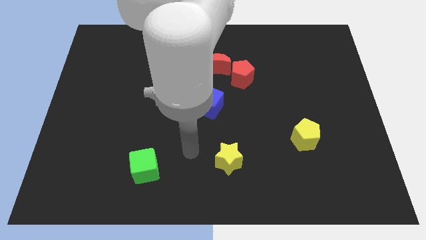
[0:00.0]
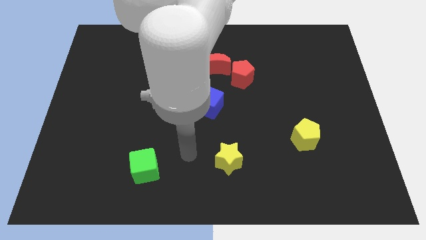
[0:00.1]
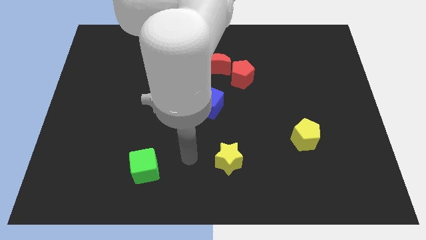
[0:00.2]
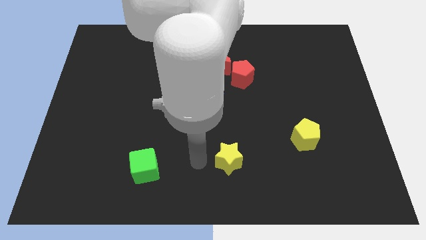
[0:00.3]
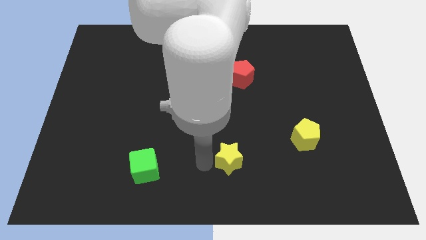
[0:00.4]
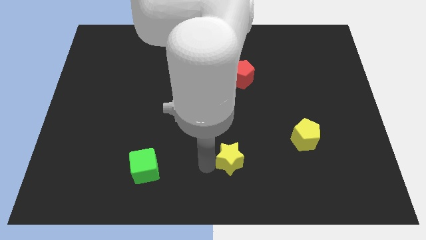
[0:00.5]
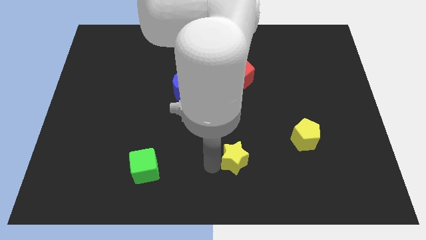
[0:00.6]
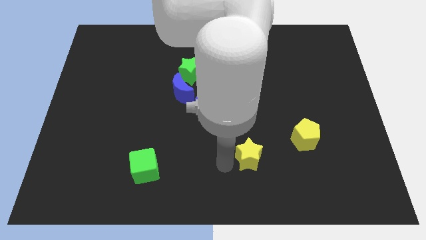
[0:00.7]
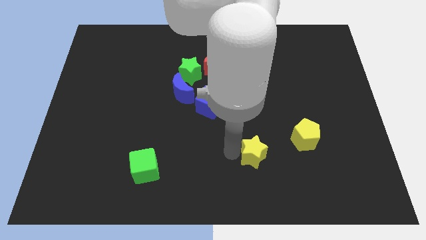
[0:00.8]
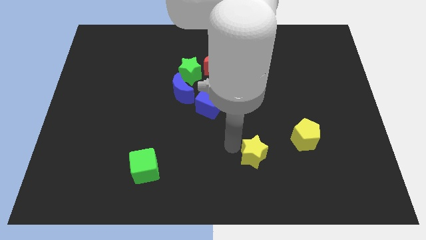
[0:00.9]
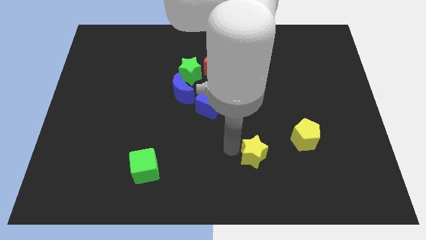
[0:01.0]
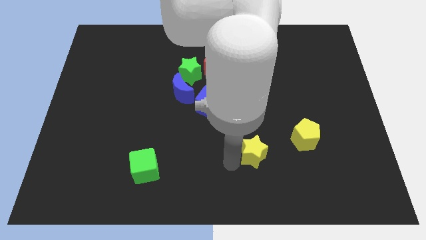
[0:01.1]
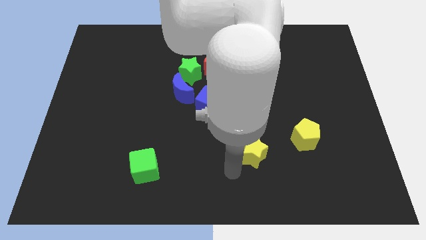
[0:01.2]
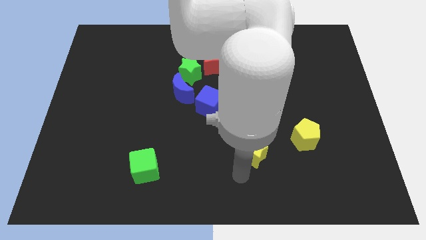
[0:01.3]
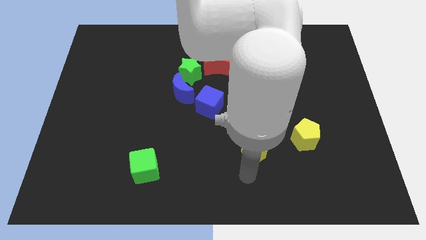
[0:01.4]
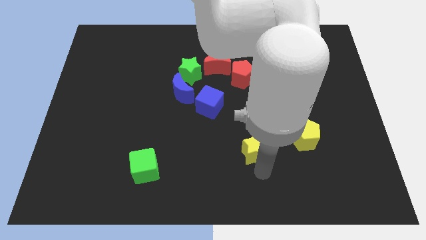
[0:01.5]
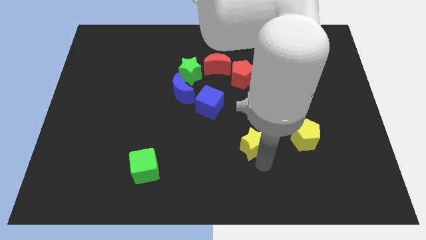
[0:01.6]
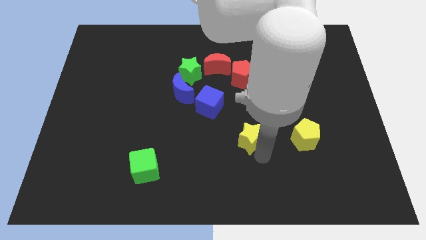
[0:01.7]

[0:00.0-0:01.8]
move yellow star to the left of yellow pentagon

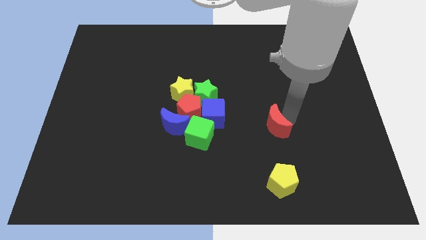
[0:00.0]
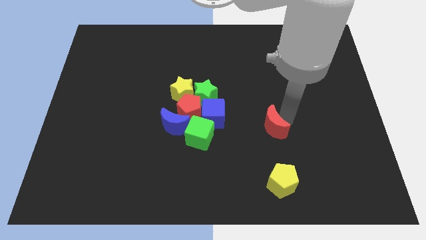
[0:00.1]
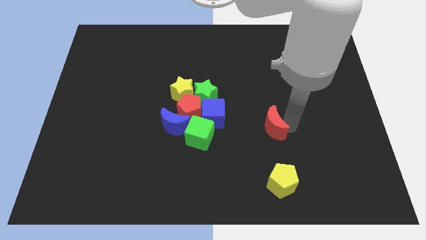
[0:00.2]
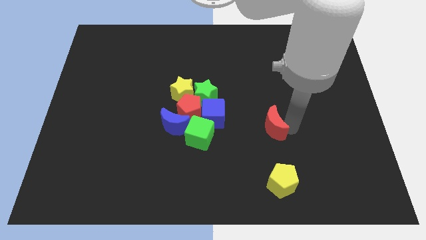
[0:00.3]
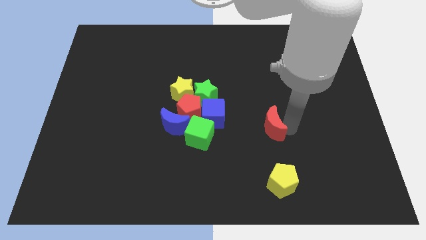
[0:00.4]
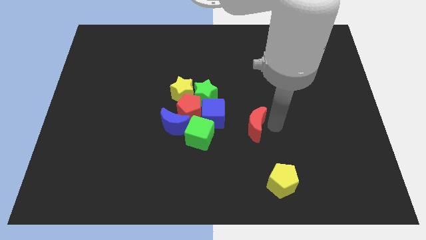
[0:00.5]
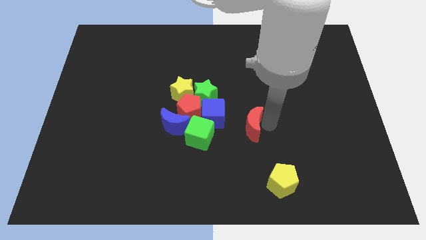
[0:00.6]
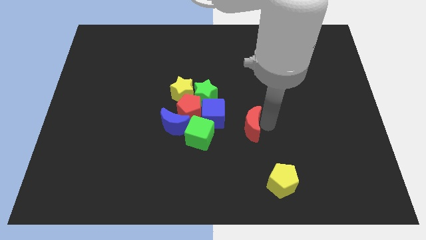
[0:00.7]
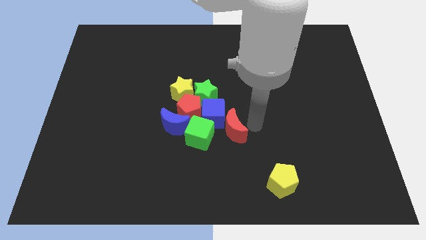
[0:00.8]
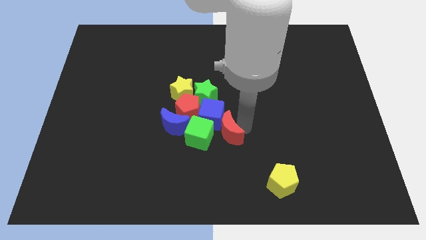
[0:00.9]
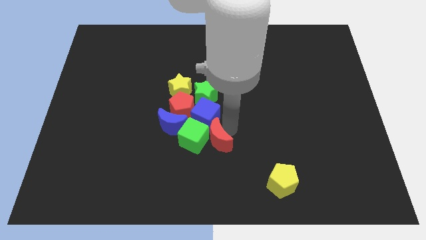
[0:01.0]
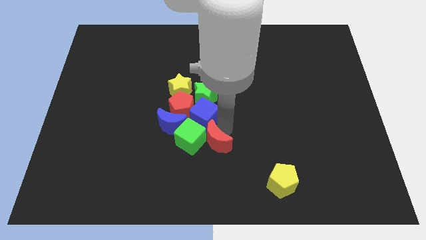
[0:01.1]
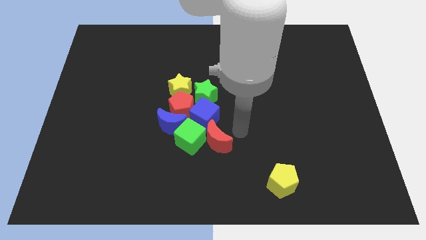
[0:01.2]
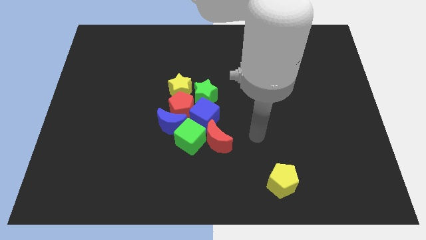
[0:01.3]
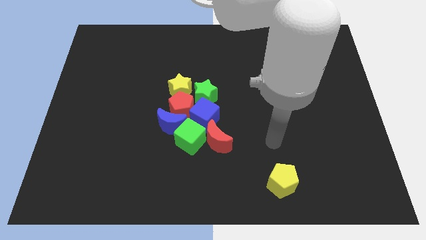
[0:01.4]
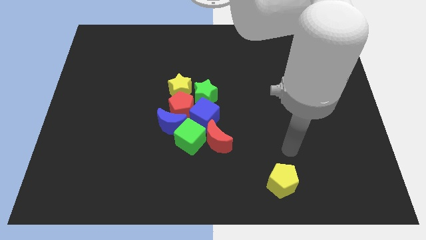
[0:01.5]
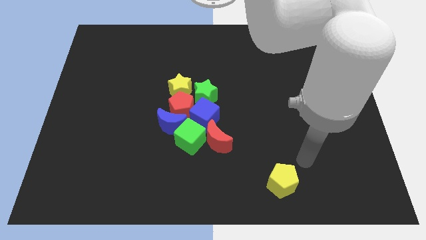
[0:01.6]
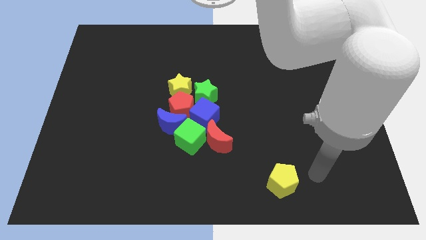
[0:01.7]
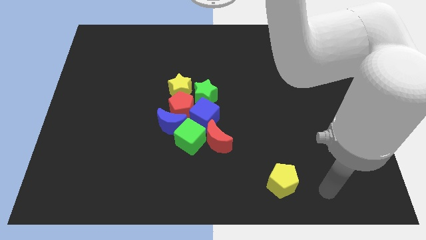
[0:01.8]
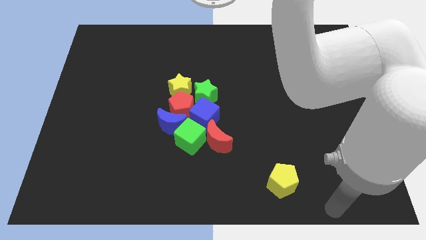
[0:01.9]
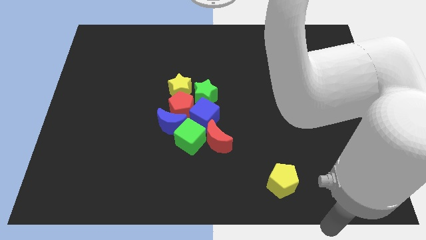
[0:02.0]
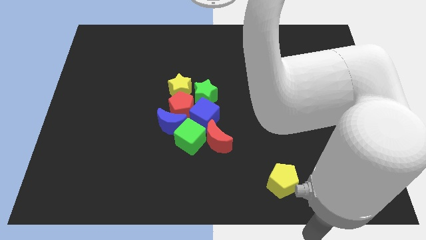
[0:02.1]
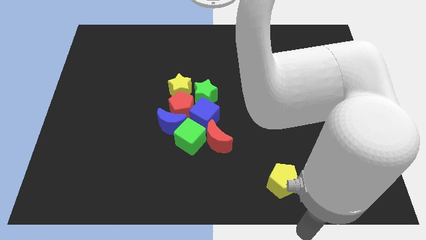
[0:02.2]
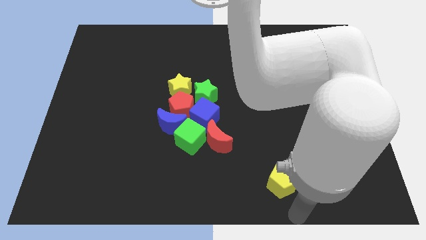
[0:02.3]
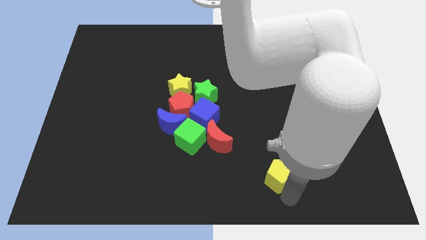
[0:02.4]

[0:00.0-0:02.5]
place the arm down to the yellow pentagon

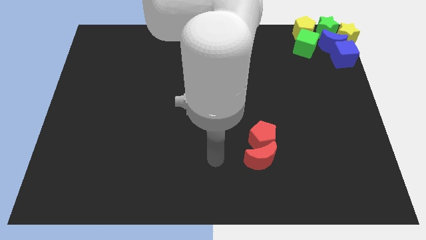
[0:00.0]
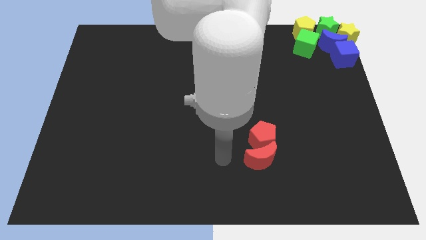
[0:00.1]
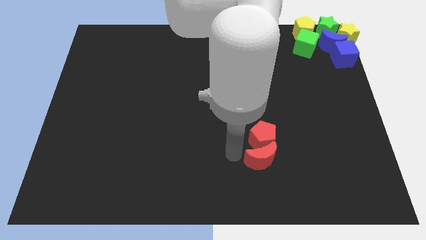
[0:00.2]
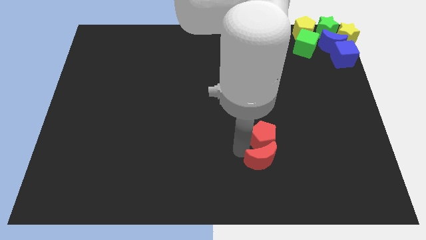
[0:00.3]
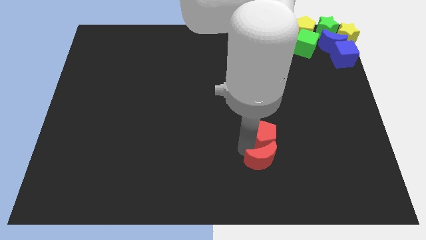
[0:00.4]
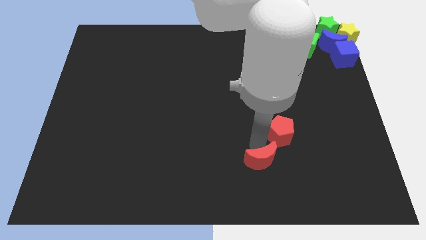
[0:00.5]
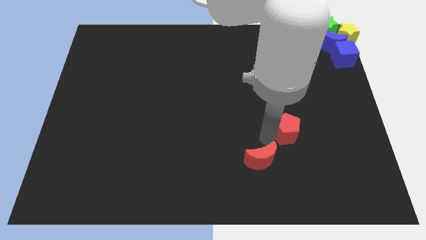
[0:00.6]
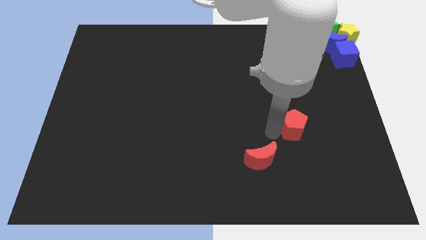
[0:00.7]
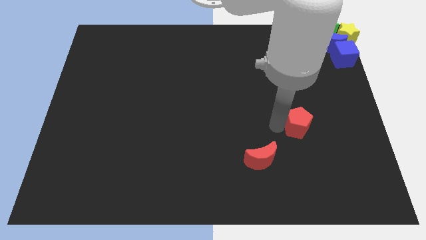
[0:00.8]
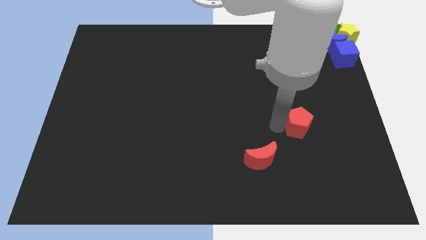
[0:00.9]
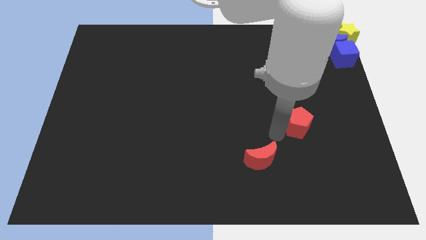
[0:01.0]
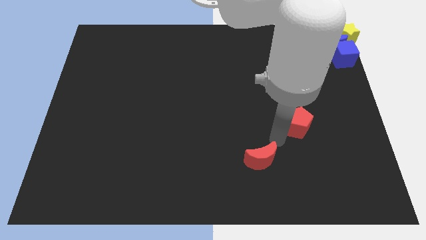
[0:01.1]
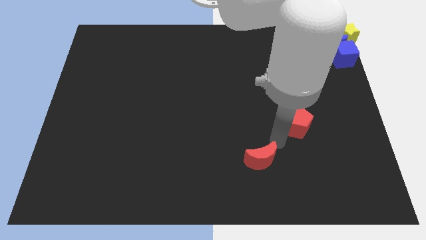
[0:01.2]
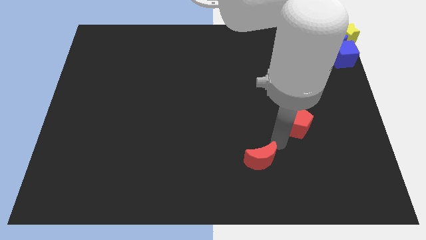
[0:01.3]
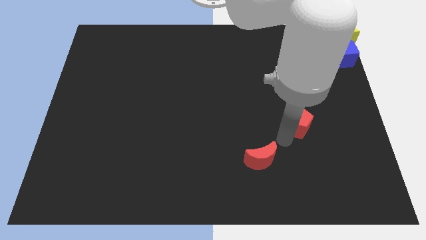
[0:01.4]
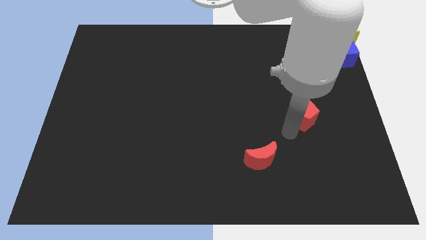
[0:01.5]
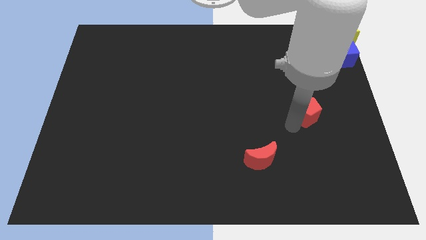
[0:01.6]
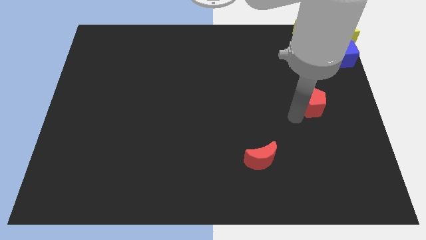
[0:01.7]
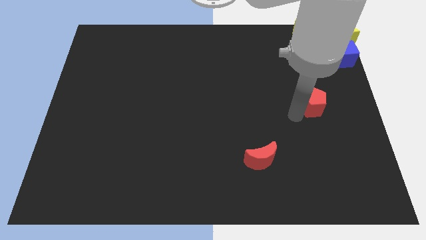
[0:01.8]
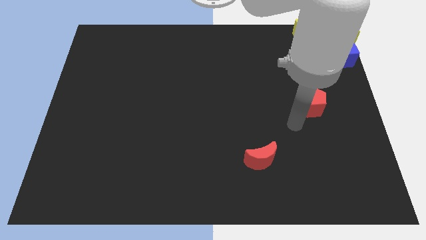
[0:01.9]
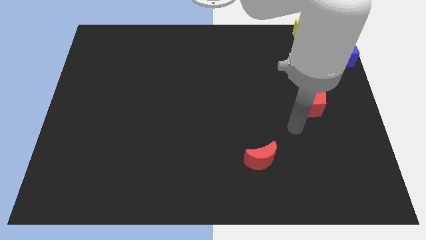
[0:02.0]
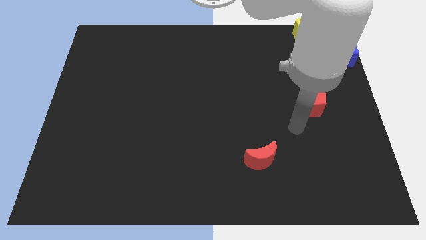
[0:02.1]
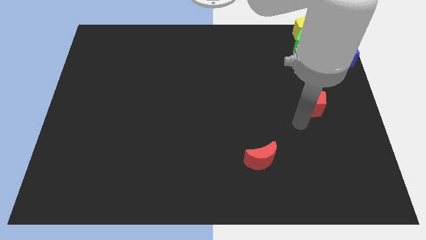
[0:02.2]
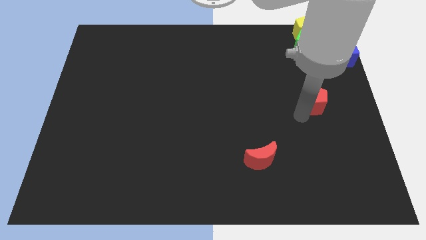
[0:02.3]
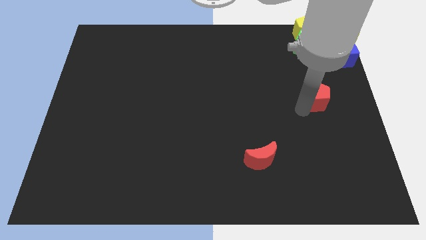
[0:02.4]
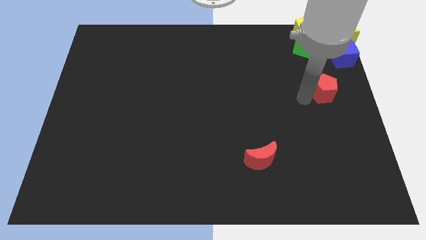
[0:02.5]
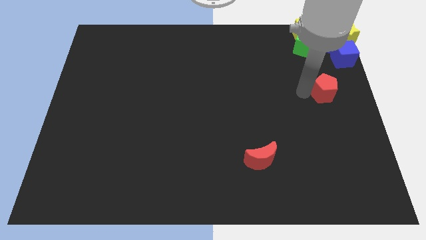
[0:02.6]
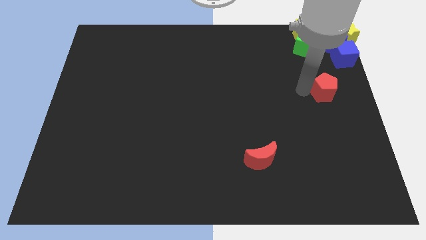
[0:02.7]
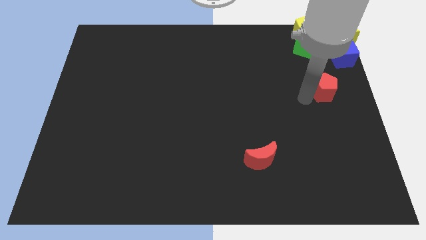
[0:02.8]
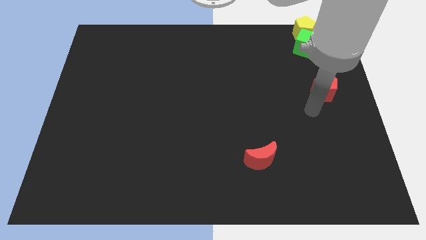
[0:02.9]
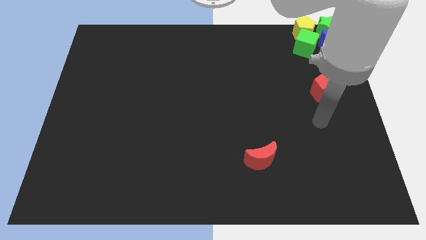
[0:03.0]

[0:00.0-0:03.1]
separate the red moon and red pentagon

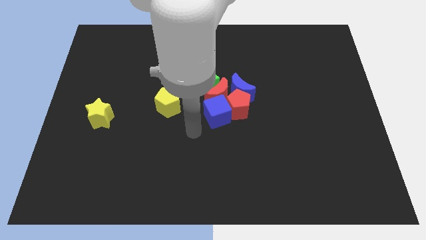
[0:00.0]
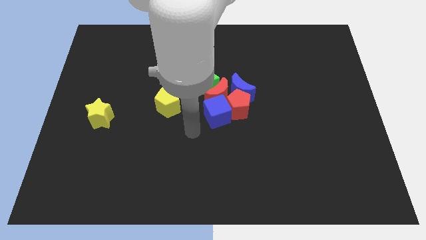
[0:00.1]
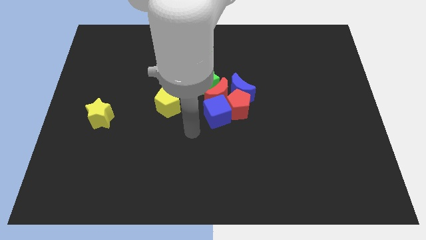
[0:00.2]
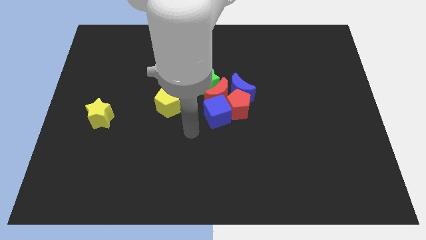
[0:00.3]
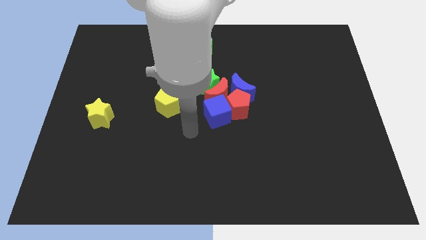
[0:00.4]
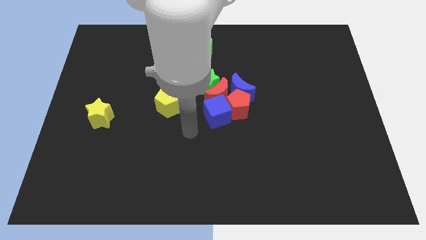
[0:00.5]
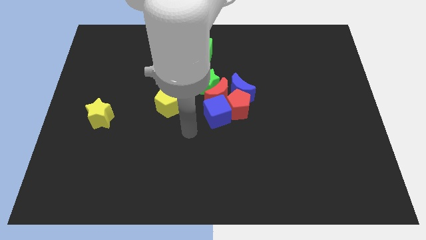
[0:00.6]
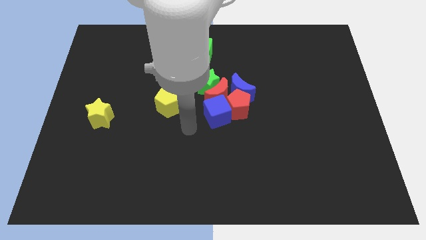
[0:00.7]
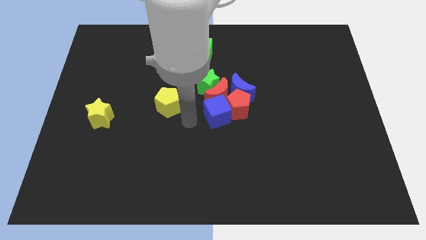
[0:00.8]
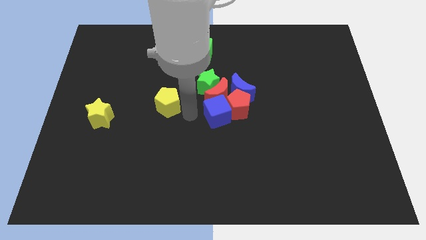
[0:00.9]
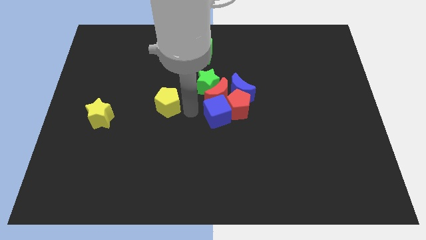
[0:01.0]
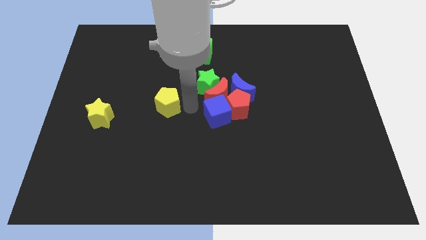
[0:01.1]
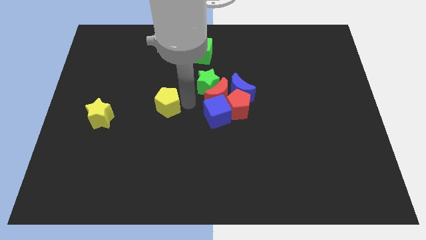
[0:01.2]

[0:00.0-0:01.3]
place your arm in between the yellow pentagon and red crescent

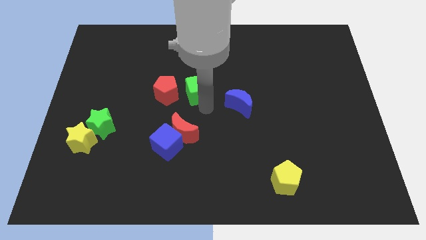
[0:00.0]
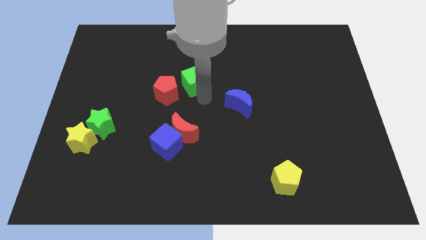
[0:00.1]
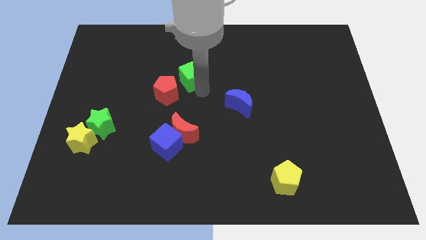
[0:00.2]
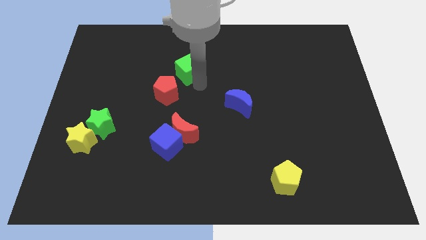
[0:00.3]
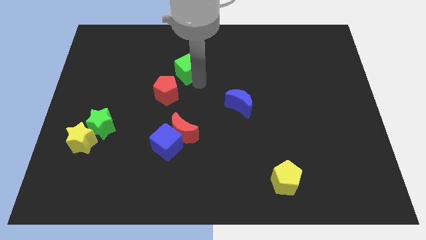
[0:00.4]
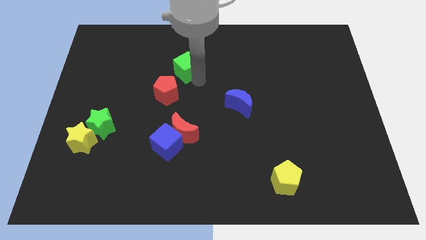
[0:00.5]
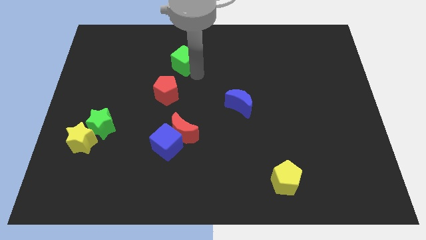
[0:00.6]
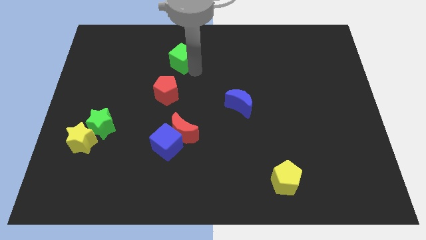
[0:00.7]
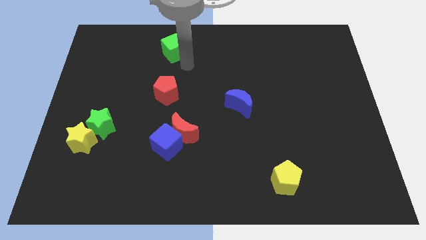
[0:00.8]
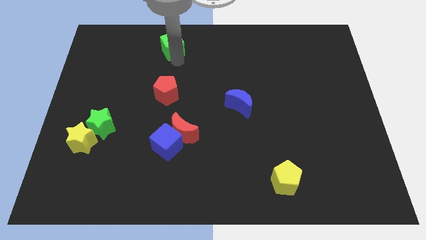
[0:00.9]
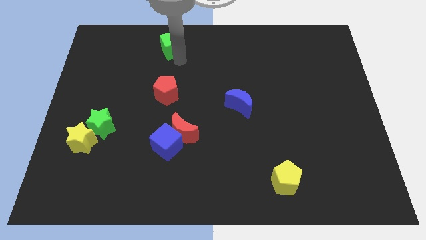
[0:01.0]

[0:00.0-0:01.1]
push the green cube to the top center
